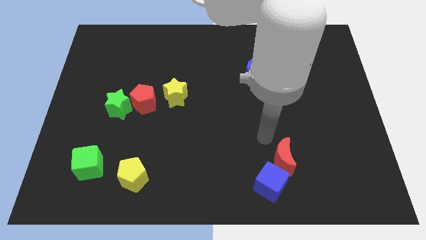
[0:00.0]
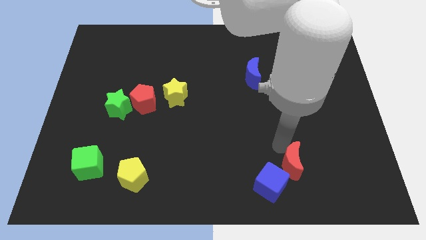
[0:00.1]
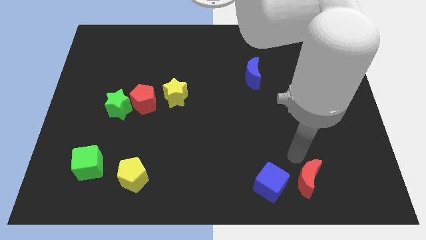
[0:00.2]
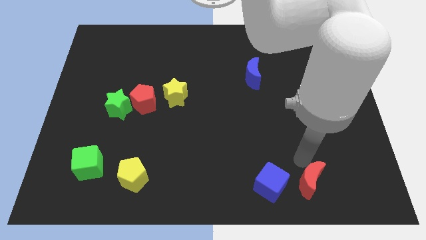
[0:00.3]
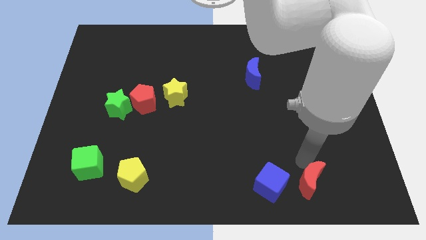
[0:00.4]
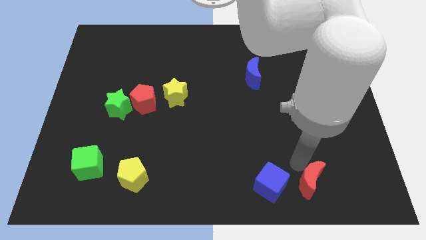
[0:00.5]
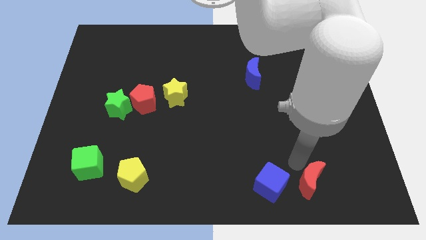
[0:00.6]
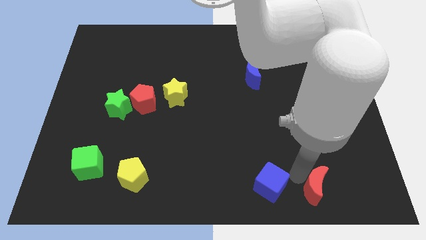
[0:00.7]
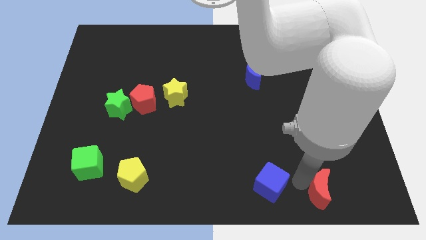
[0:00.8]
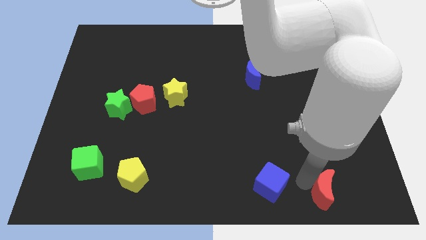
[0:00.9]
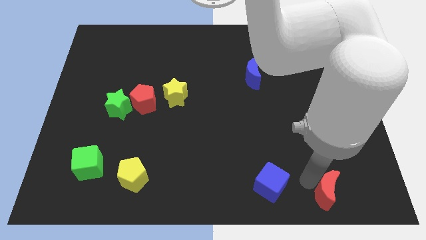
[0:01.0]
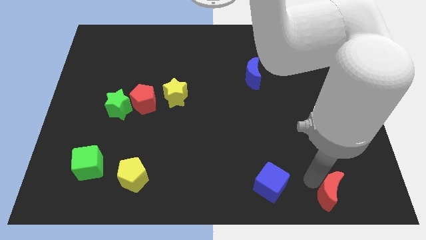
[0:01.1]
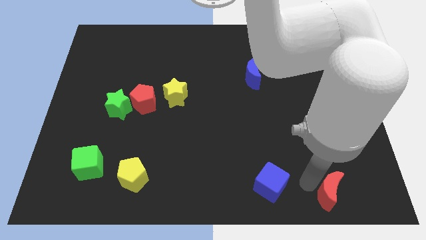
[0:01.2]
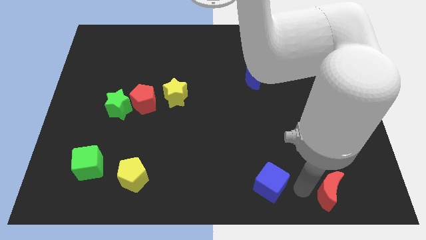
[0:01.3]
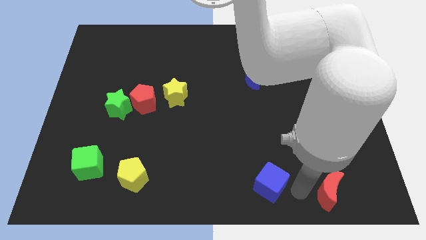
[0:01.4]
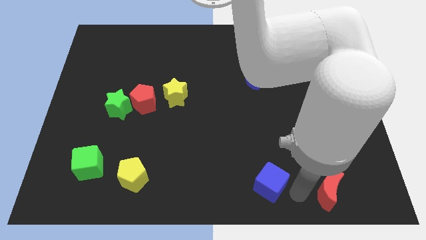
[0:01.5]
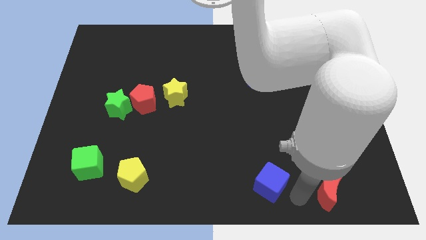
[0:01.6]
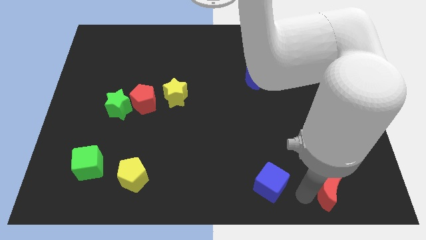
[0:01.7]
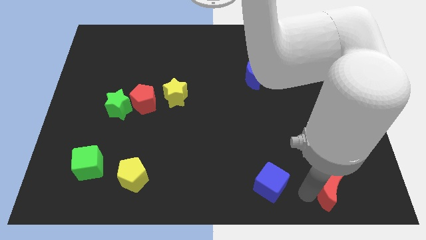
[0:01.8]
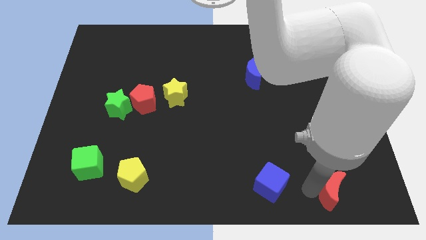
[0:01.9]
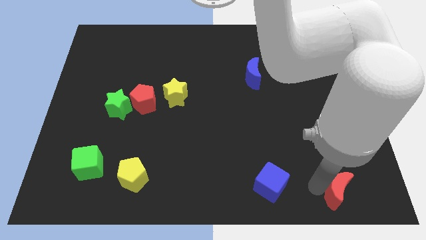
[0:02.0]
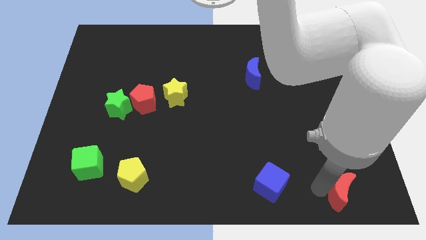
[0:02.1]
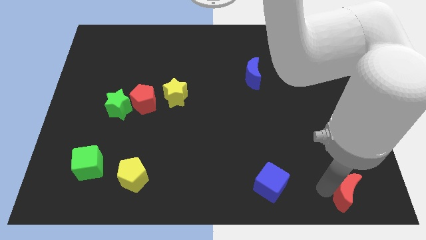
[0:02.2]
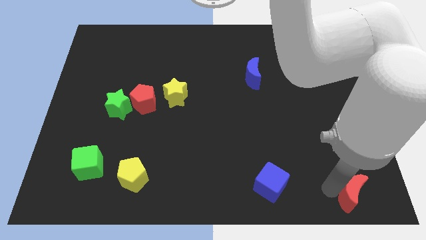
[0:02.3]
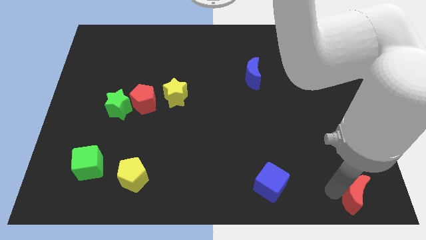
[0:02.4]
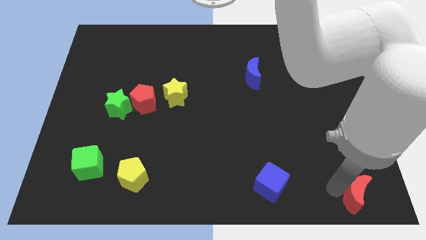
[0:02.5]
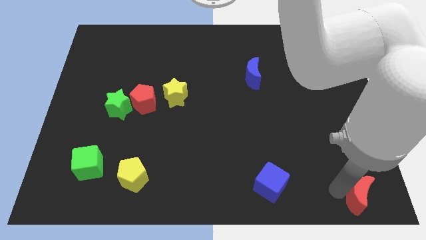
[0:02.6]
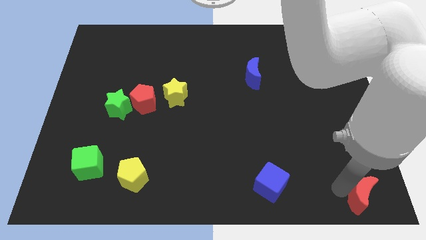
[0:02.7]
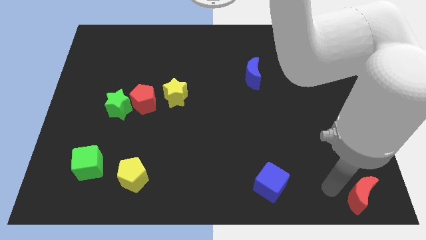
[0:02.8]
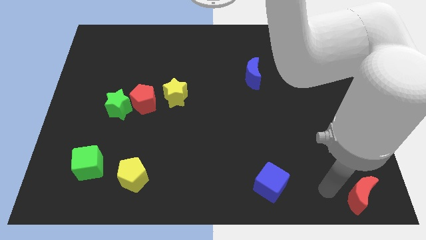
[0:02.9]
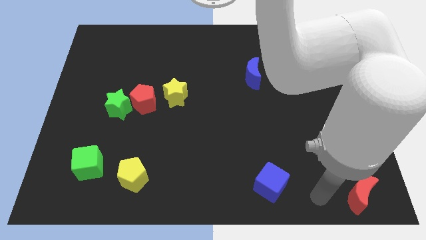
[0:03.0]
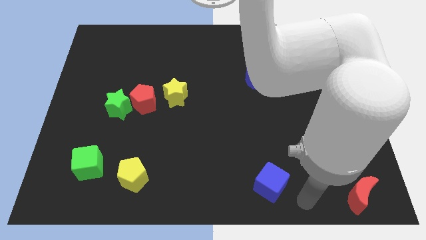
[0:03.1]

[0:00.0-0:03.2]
move red moon to the bottom right of the board

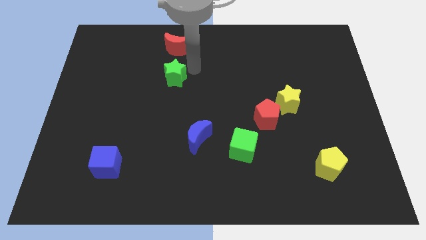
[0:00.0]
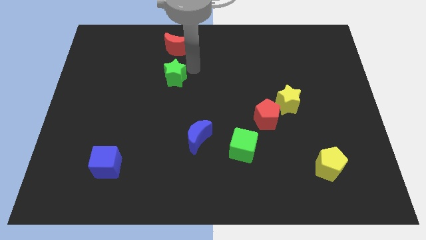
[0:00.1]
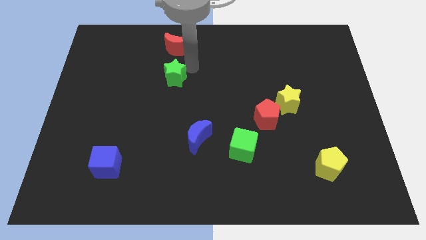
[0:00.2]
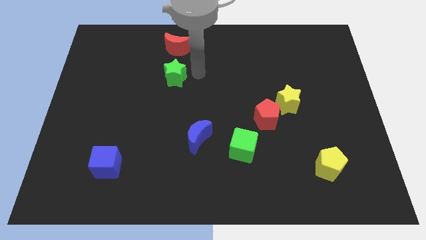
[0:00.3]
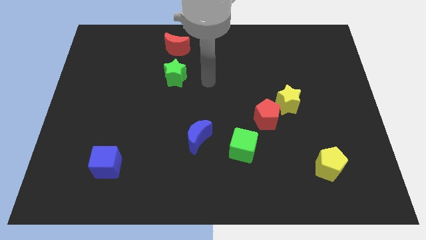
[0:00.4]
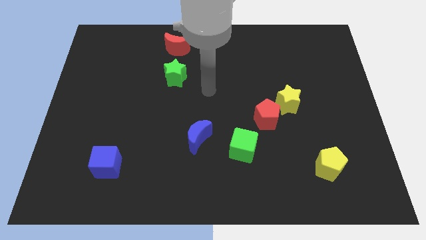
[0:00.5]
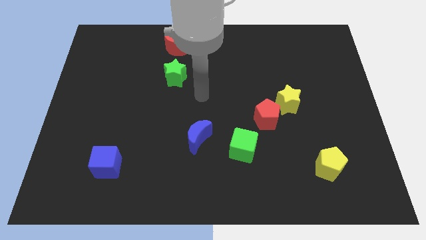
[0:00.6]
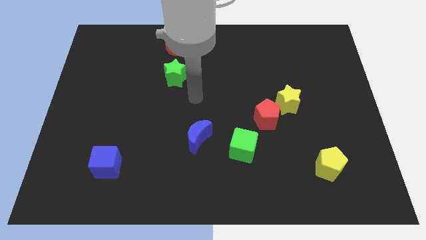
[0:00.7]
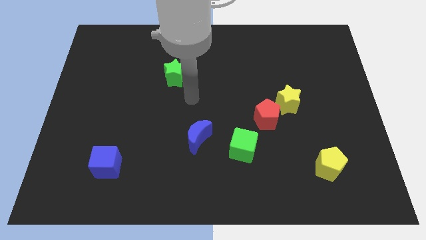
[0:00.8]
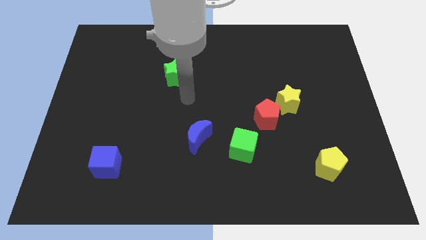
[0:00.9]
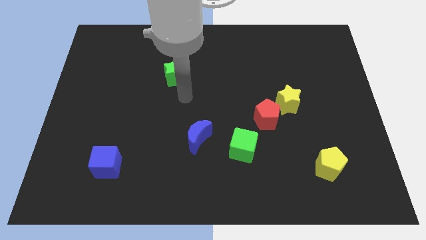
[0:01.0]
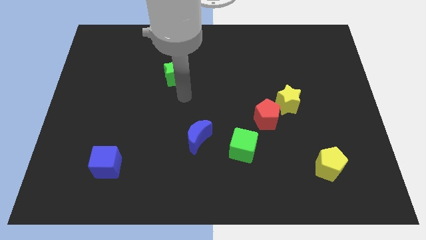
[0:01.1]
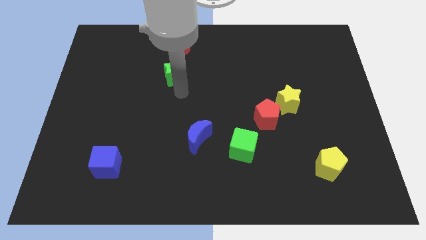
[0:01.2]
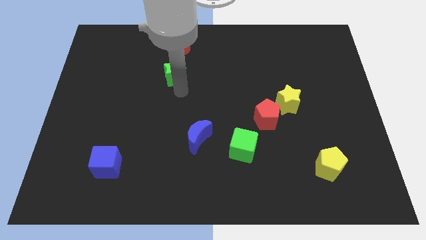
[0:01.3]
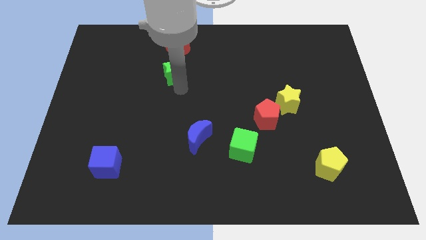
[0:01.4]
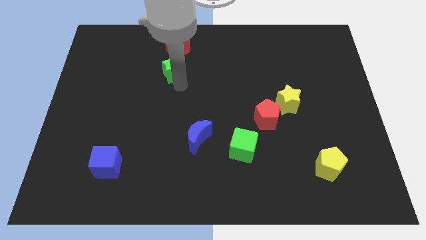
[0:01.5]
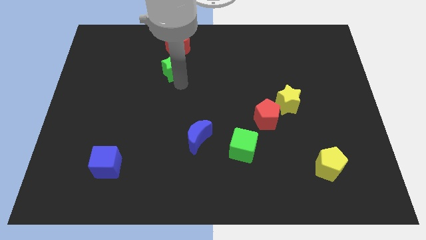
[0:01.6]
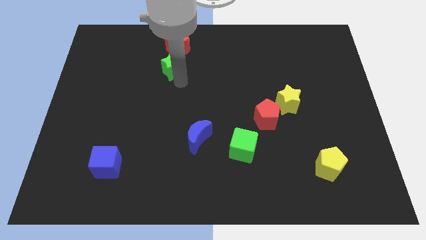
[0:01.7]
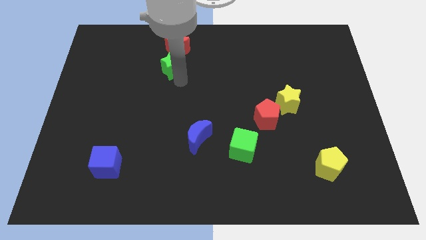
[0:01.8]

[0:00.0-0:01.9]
push the green star in the bottom of red moon

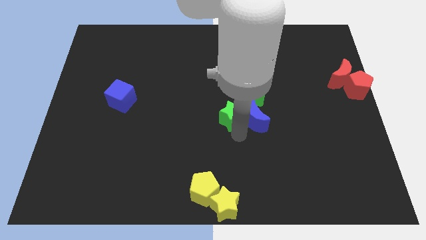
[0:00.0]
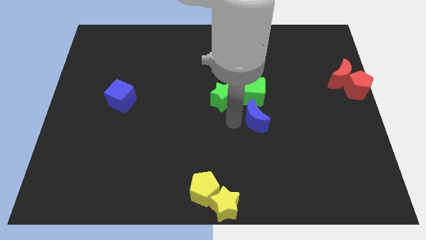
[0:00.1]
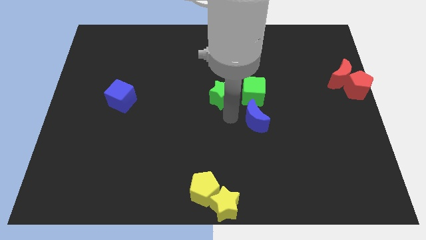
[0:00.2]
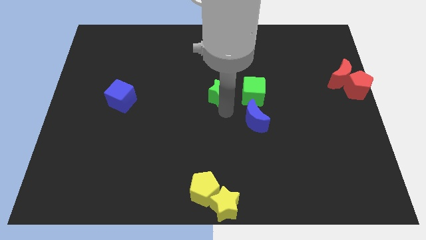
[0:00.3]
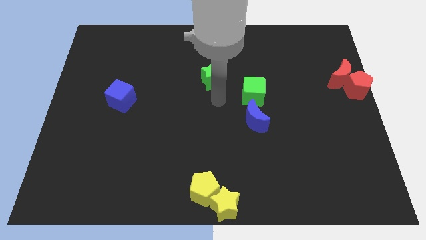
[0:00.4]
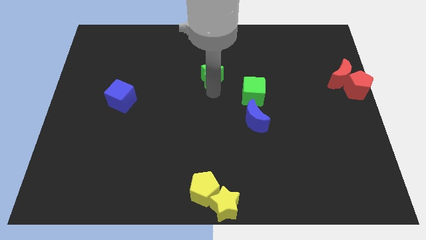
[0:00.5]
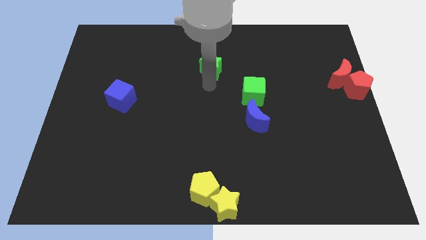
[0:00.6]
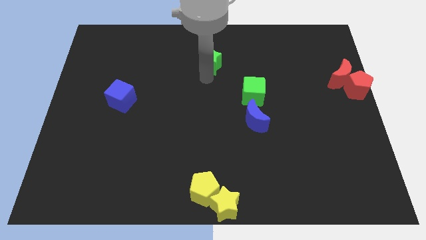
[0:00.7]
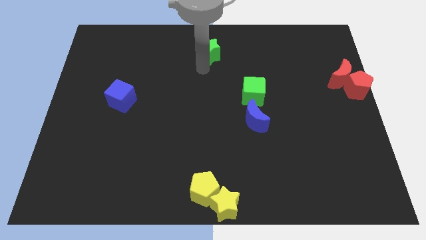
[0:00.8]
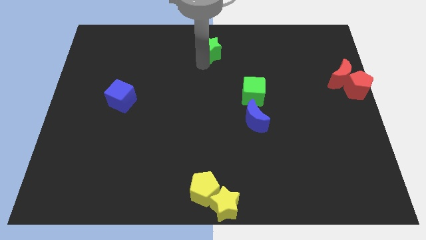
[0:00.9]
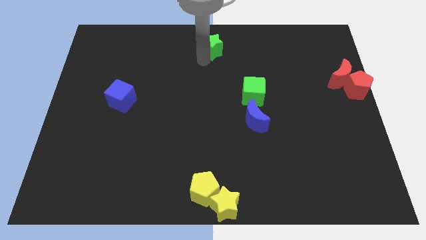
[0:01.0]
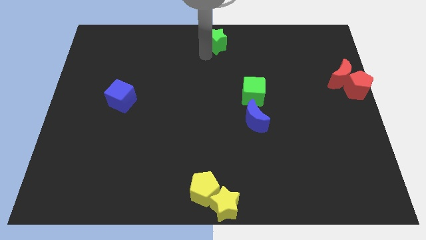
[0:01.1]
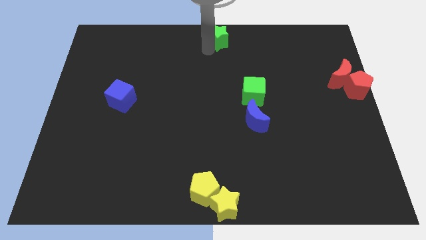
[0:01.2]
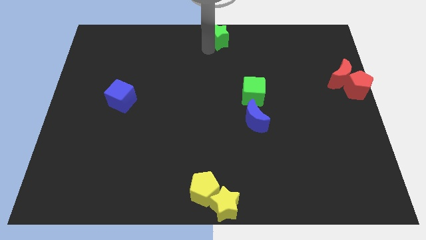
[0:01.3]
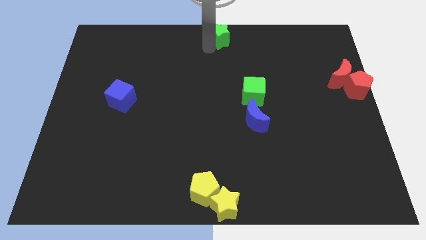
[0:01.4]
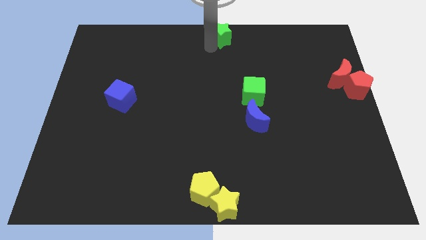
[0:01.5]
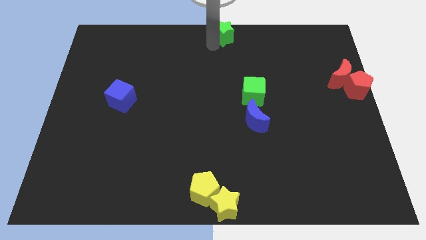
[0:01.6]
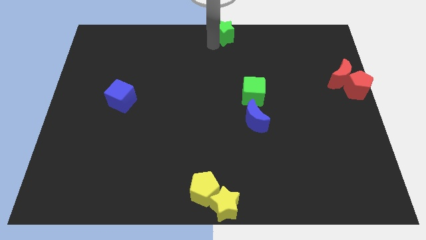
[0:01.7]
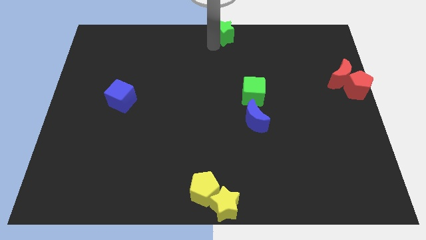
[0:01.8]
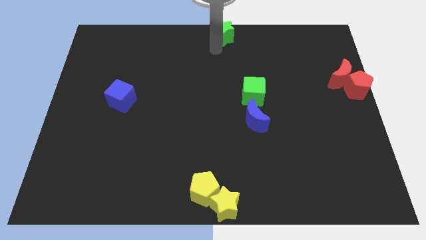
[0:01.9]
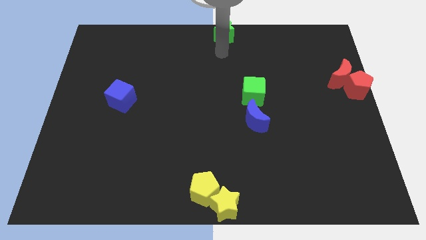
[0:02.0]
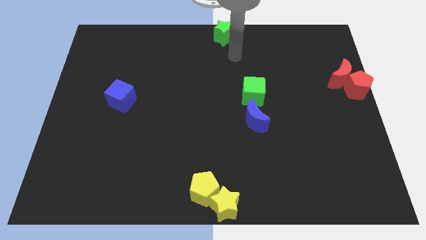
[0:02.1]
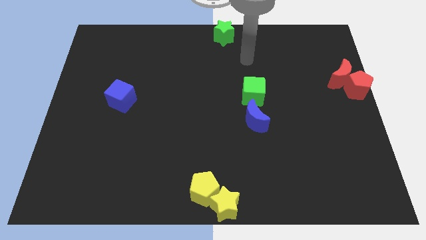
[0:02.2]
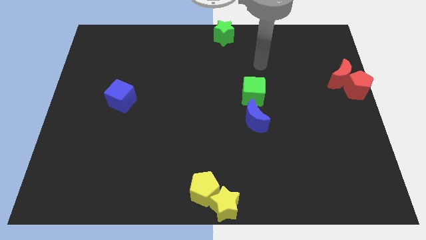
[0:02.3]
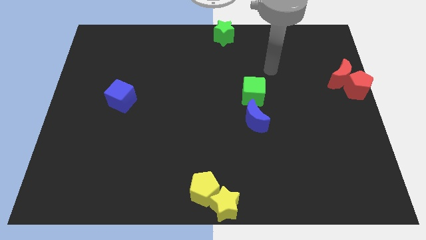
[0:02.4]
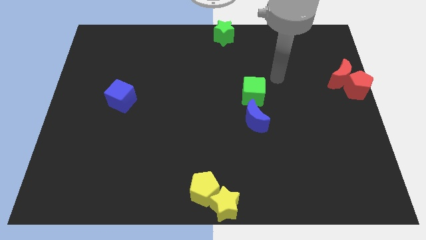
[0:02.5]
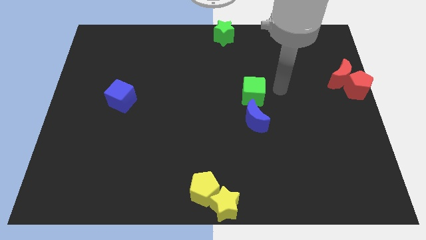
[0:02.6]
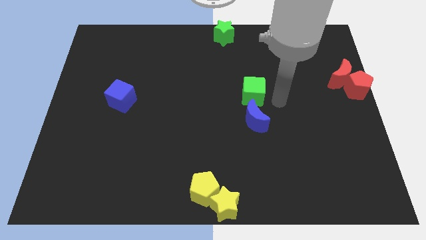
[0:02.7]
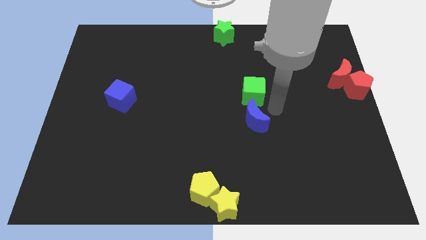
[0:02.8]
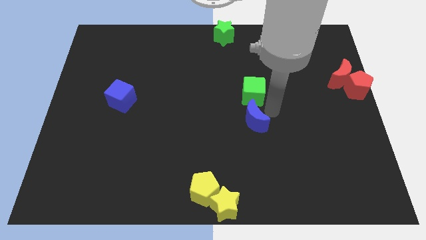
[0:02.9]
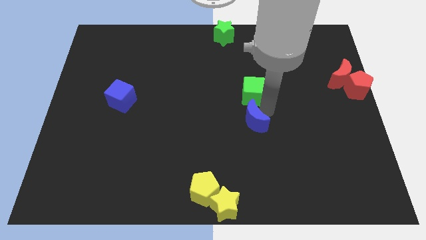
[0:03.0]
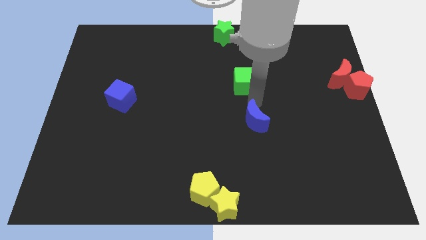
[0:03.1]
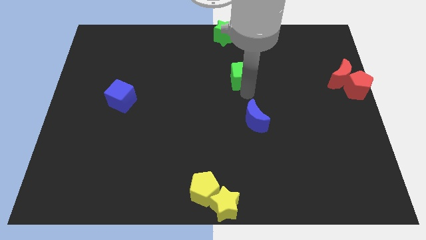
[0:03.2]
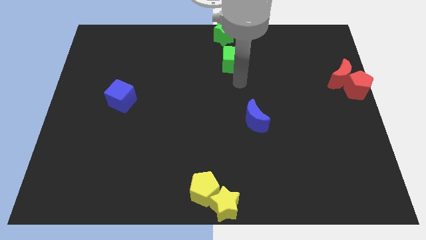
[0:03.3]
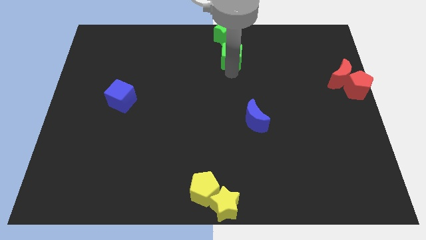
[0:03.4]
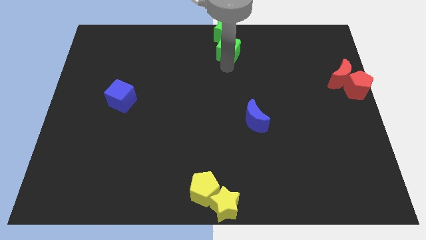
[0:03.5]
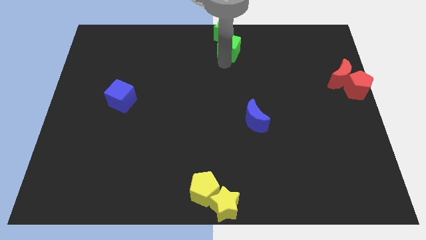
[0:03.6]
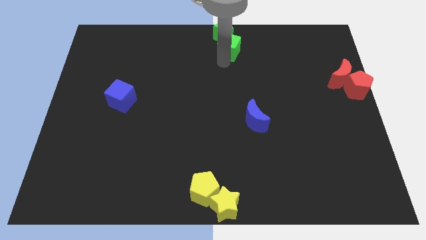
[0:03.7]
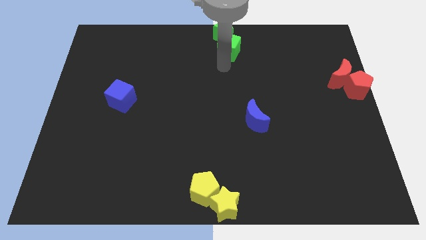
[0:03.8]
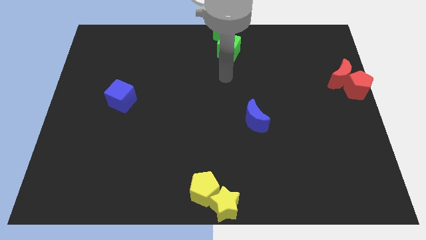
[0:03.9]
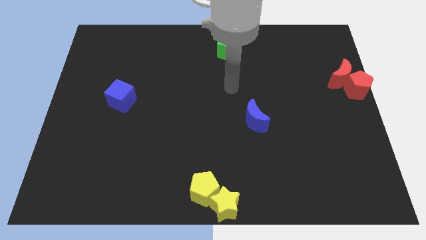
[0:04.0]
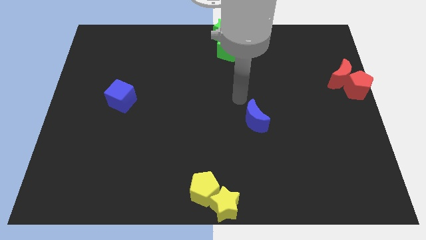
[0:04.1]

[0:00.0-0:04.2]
move the green blocks to the top center
